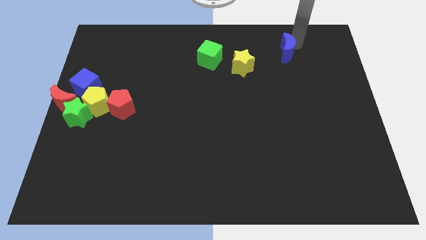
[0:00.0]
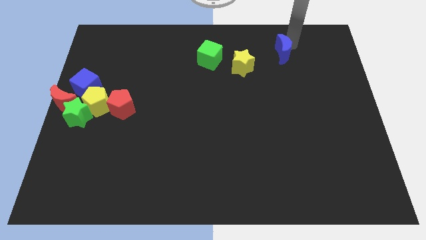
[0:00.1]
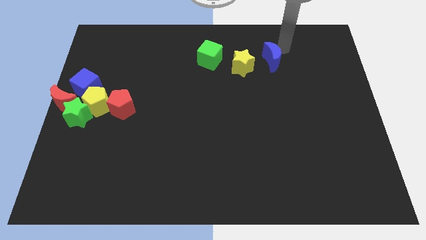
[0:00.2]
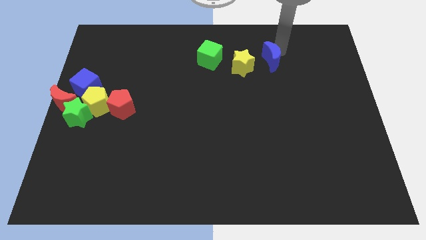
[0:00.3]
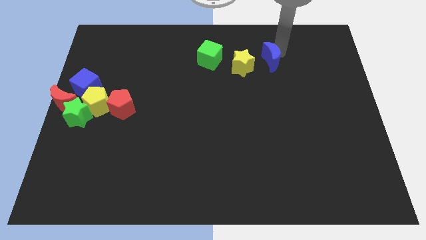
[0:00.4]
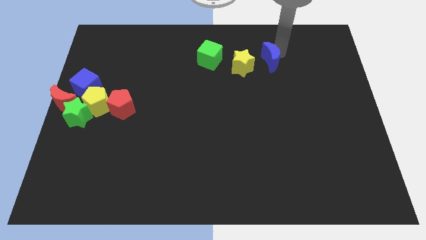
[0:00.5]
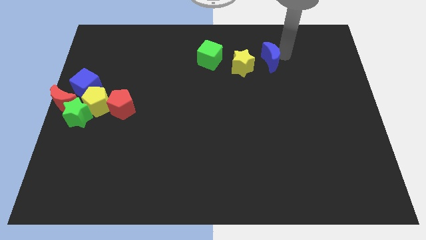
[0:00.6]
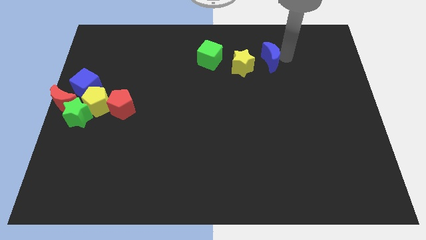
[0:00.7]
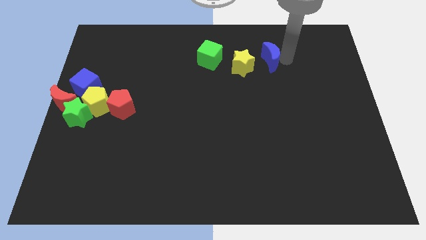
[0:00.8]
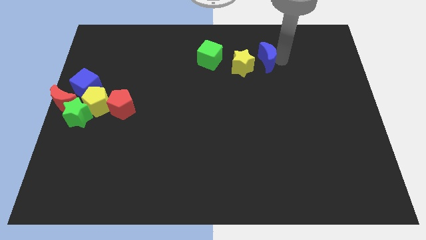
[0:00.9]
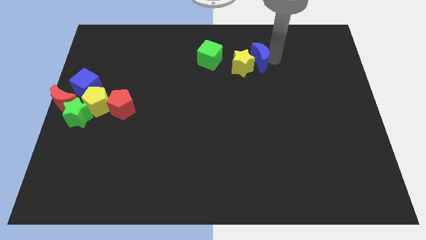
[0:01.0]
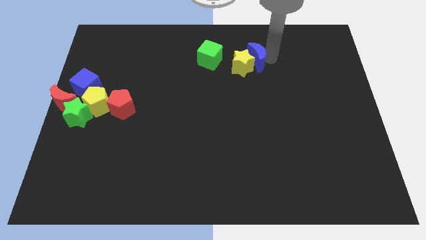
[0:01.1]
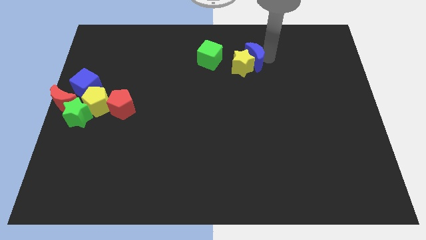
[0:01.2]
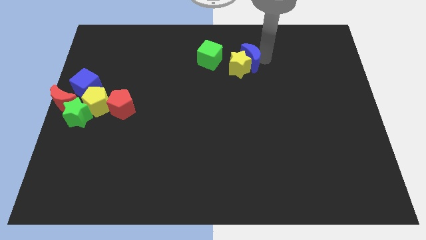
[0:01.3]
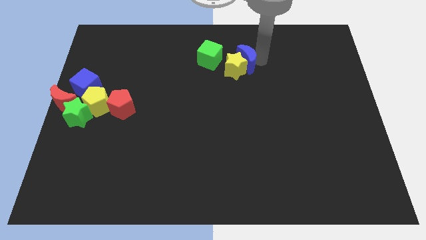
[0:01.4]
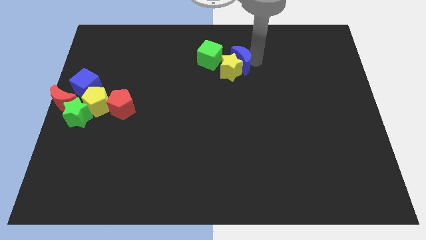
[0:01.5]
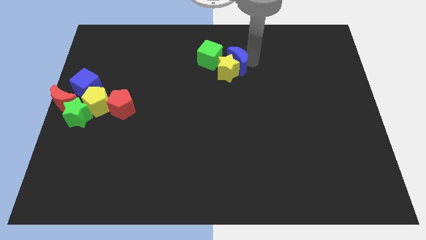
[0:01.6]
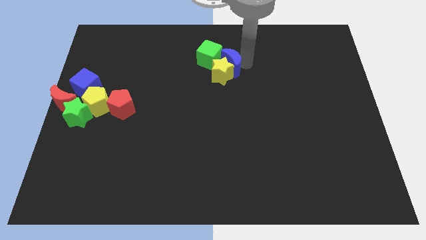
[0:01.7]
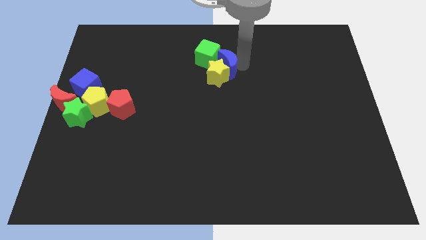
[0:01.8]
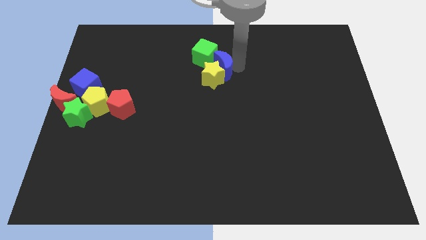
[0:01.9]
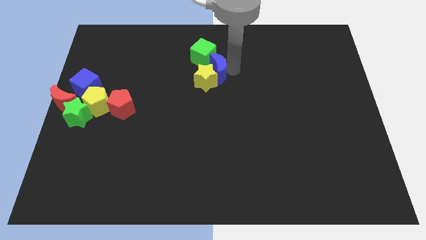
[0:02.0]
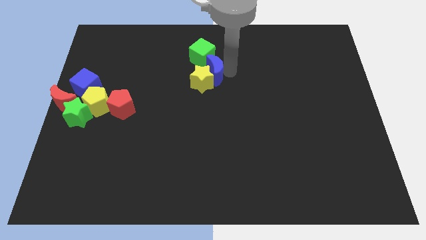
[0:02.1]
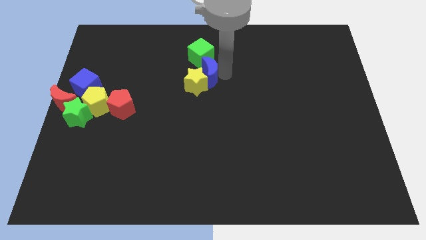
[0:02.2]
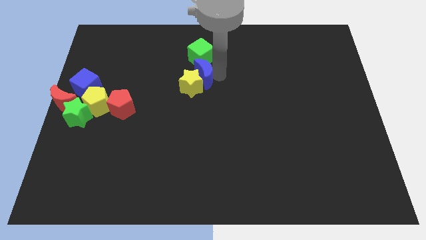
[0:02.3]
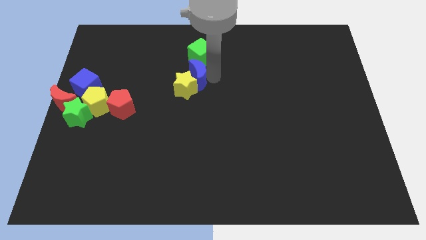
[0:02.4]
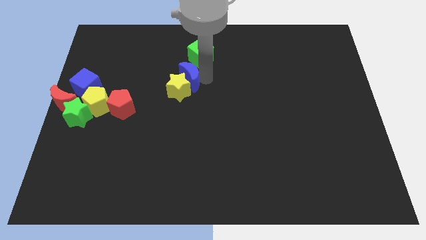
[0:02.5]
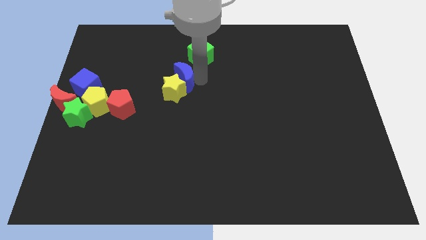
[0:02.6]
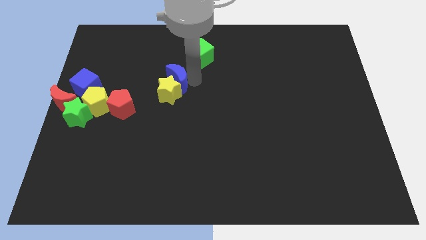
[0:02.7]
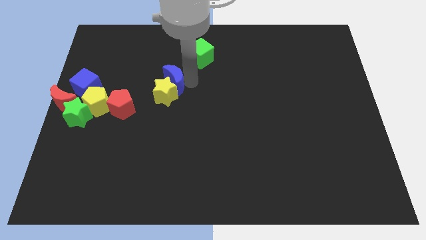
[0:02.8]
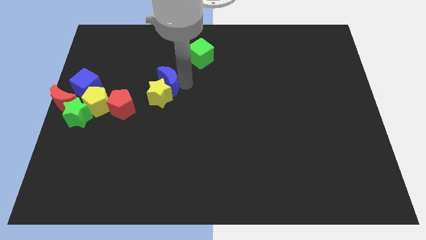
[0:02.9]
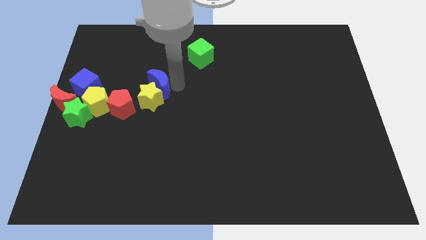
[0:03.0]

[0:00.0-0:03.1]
slide the blue moon and yellow star towards the group of blocks

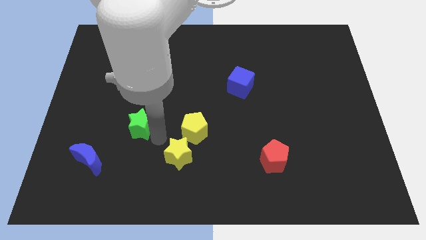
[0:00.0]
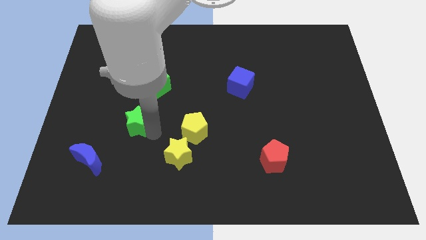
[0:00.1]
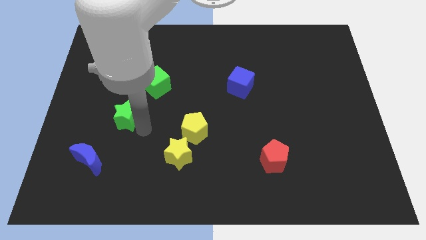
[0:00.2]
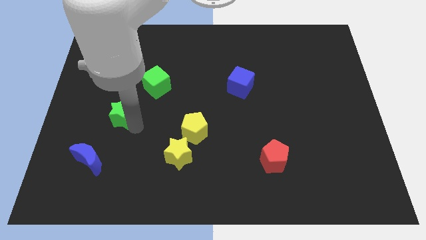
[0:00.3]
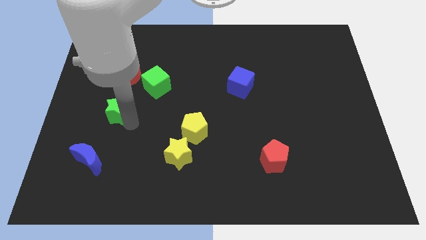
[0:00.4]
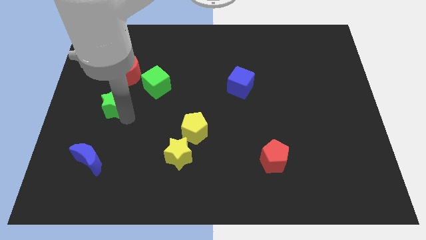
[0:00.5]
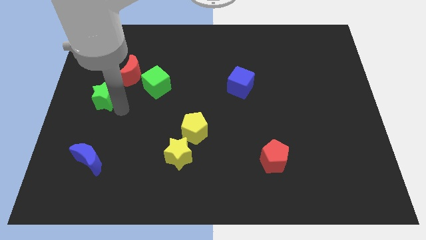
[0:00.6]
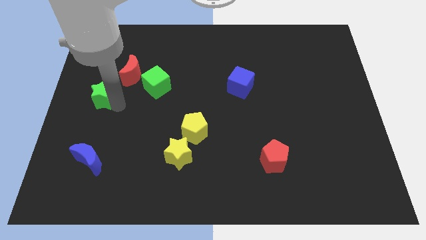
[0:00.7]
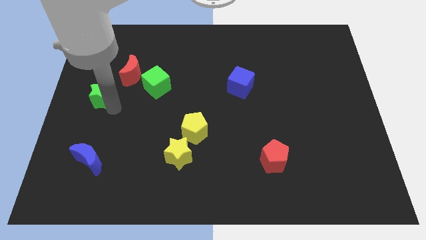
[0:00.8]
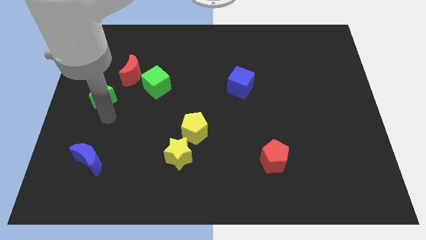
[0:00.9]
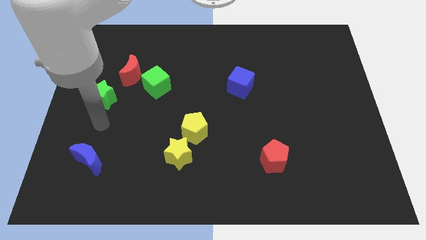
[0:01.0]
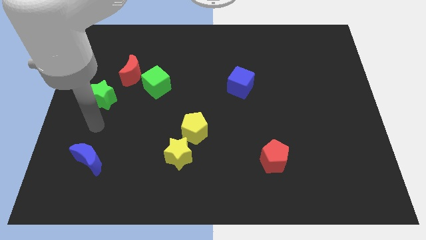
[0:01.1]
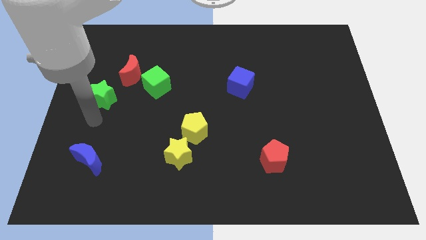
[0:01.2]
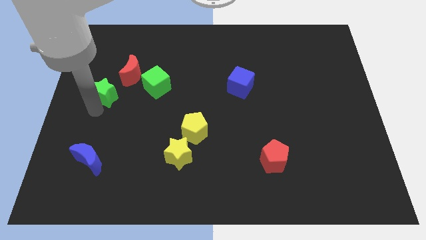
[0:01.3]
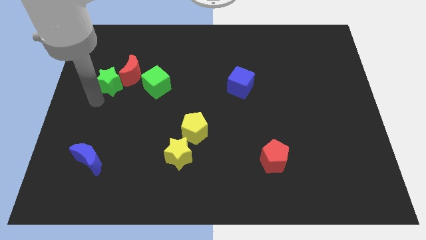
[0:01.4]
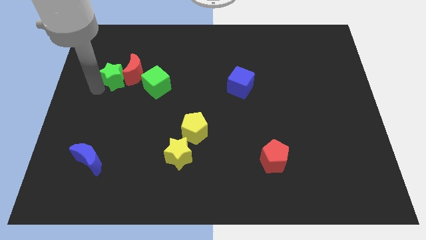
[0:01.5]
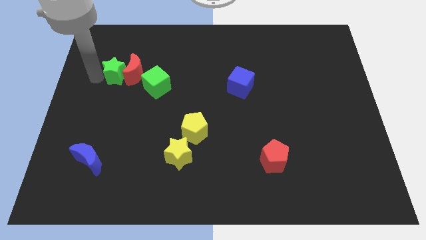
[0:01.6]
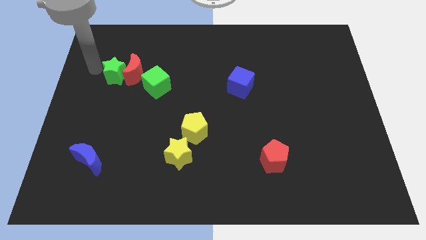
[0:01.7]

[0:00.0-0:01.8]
move the green star into the left side of the red crescent

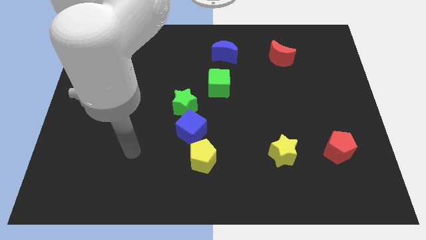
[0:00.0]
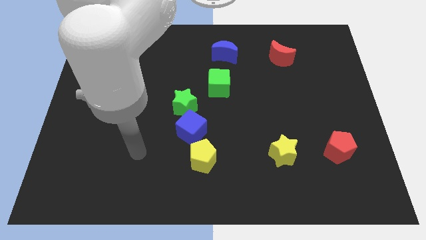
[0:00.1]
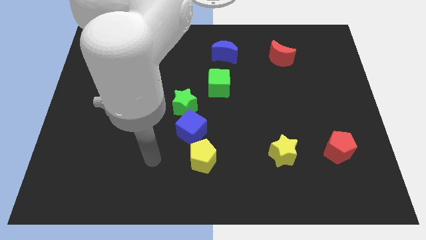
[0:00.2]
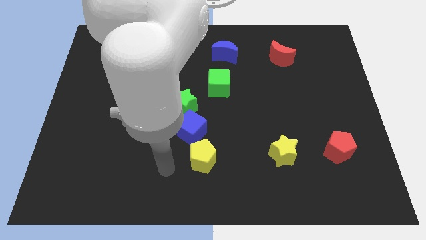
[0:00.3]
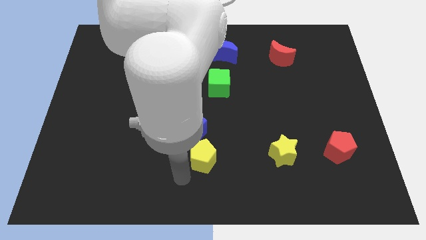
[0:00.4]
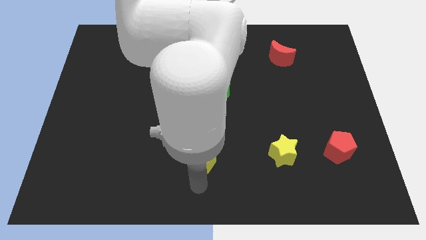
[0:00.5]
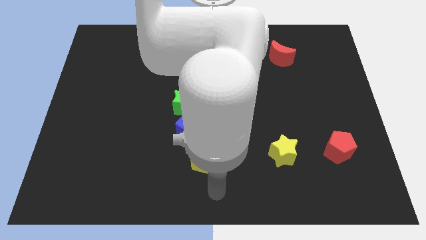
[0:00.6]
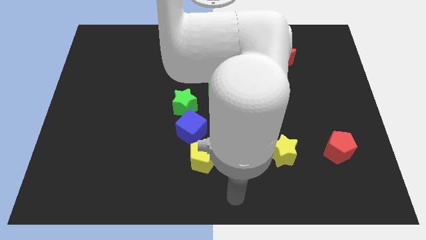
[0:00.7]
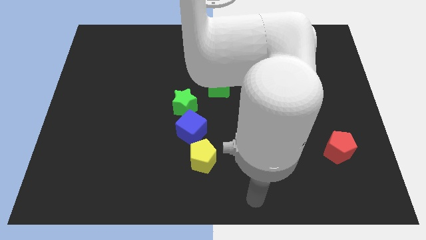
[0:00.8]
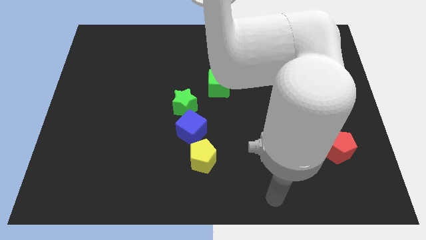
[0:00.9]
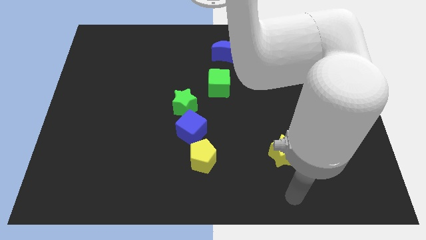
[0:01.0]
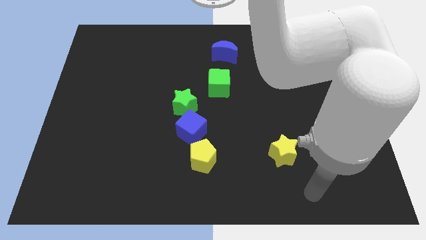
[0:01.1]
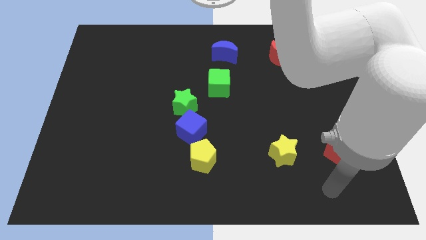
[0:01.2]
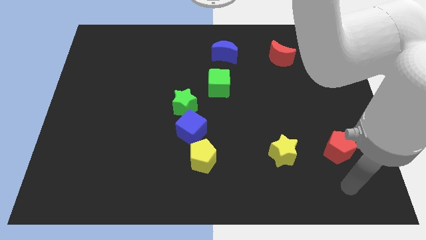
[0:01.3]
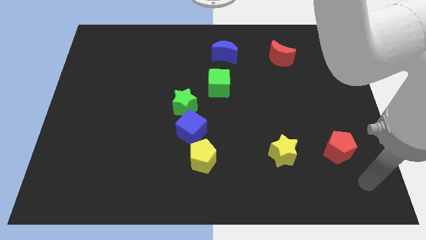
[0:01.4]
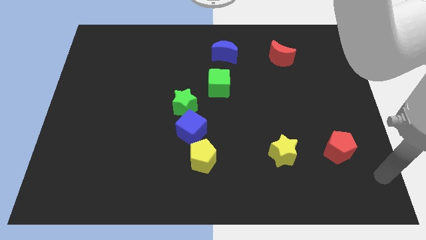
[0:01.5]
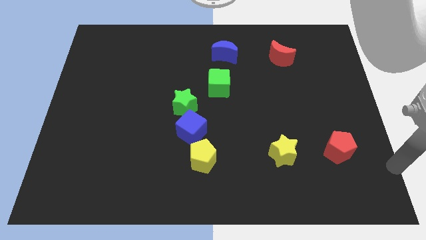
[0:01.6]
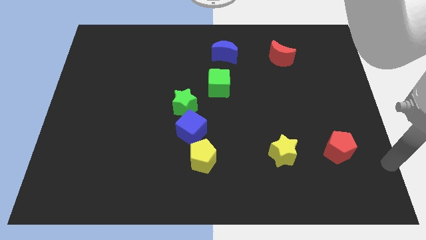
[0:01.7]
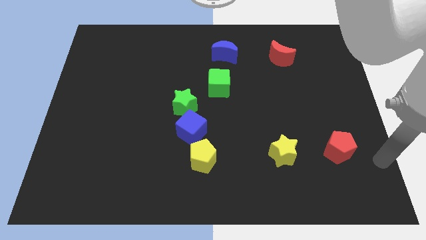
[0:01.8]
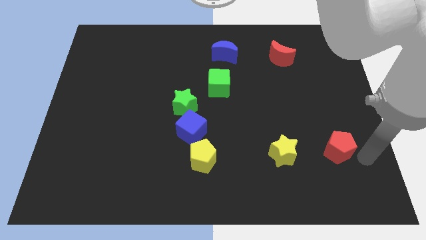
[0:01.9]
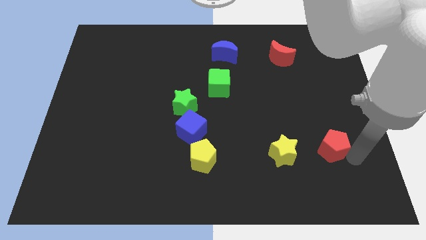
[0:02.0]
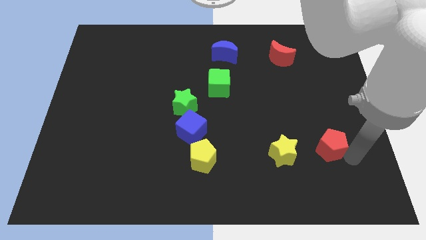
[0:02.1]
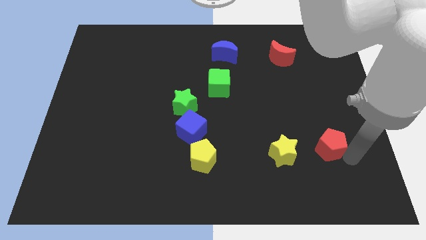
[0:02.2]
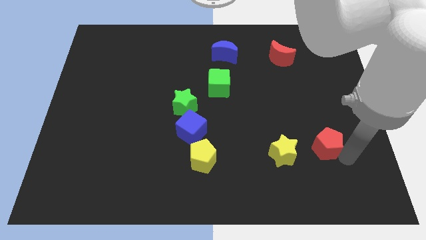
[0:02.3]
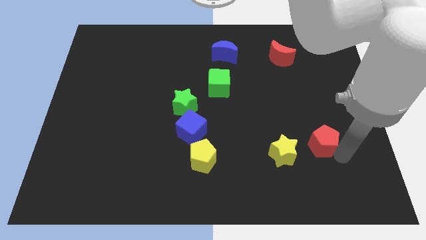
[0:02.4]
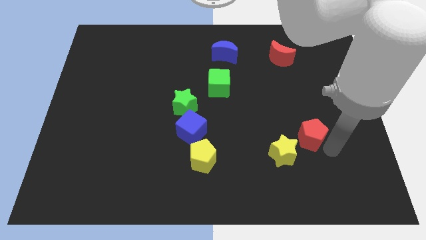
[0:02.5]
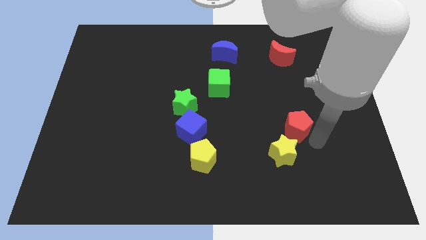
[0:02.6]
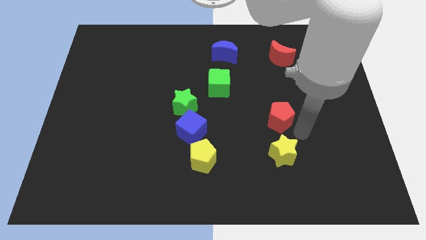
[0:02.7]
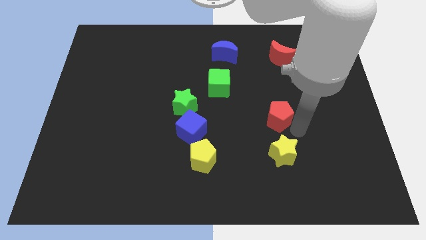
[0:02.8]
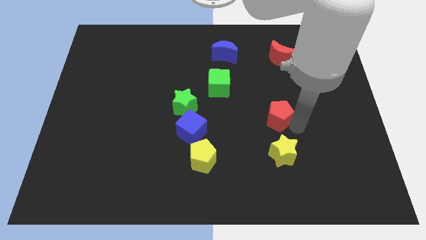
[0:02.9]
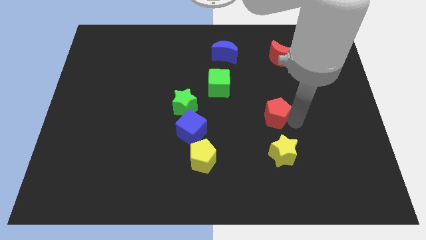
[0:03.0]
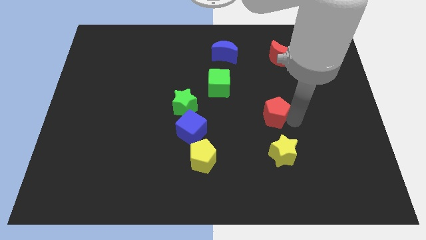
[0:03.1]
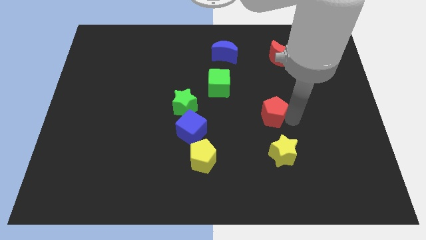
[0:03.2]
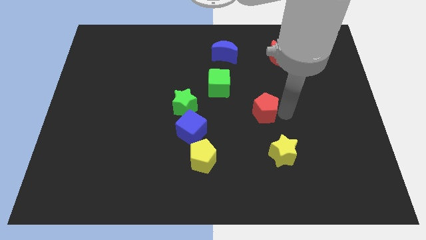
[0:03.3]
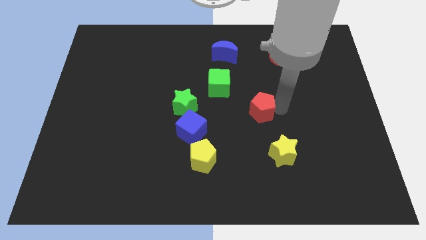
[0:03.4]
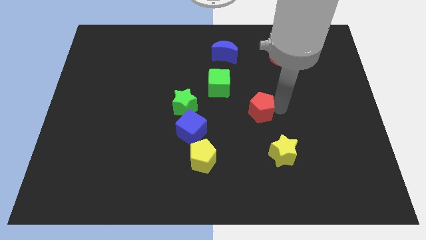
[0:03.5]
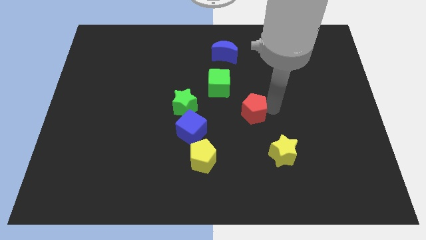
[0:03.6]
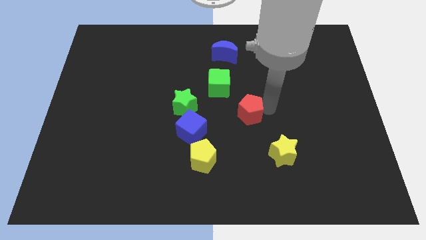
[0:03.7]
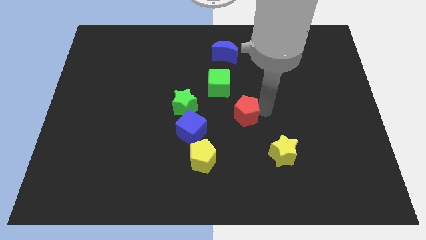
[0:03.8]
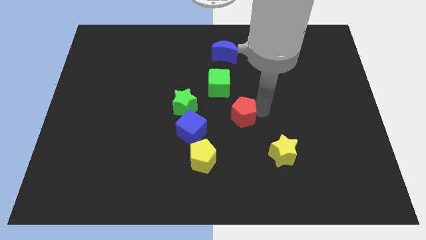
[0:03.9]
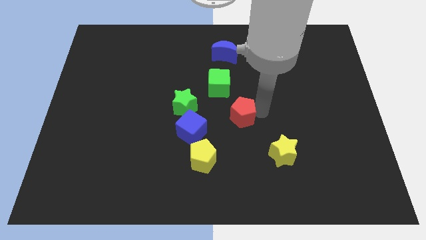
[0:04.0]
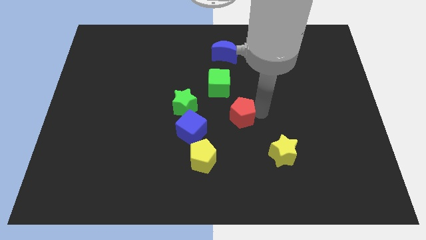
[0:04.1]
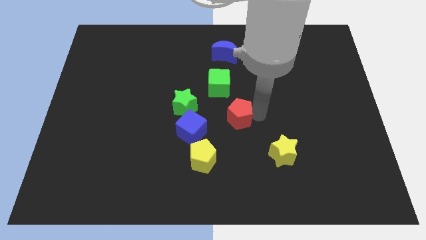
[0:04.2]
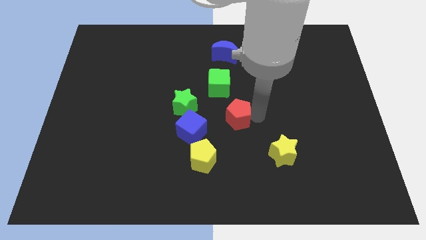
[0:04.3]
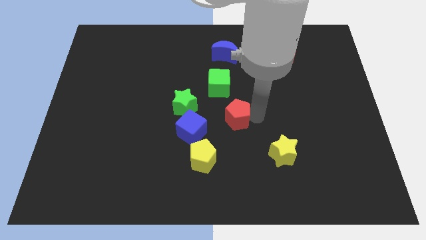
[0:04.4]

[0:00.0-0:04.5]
place red pentagon parallel to blue cube
